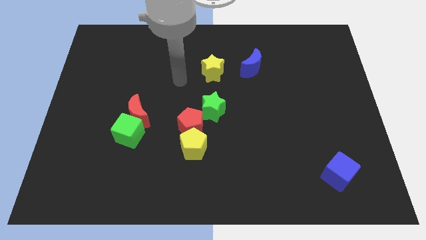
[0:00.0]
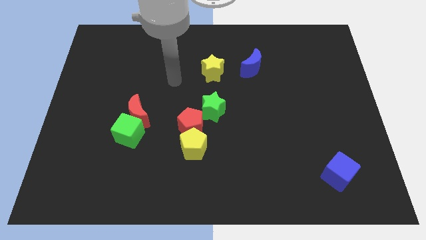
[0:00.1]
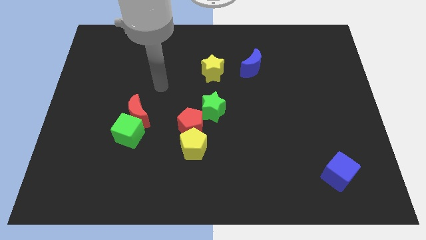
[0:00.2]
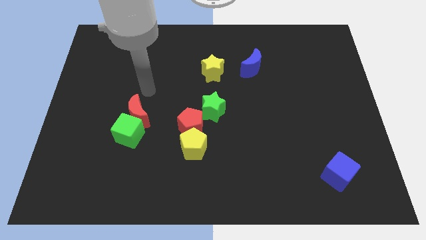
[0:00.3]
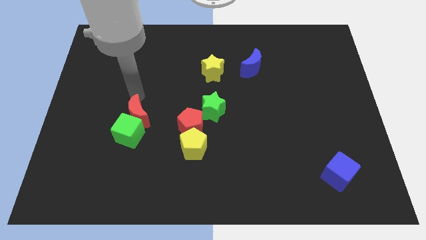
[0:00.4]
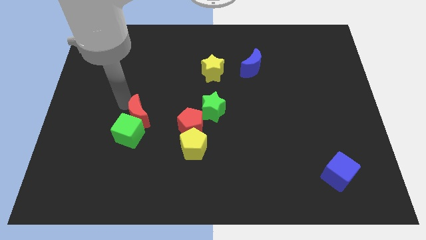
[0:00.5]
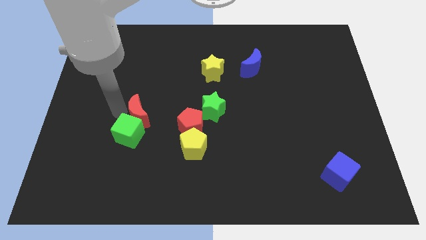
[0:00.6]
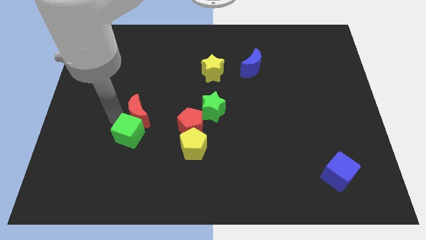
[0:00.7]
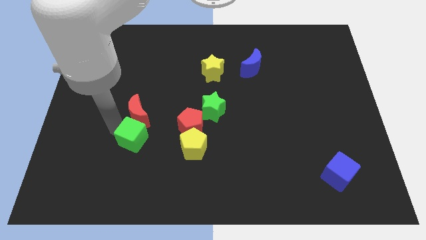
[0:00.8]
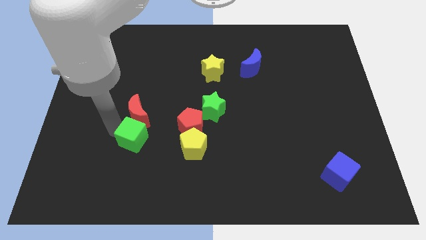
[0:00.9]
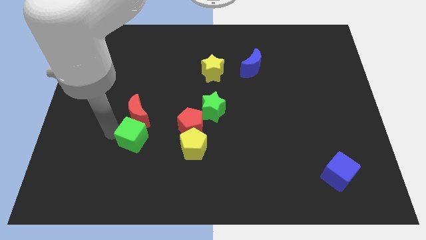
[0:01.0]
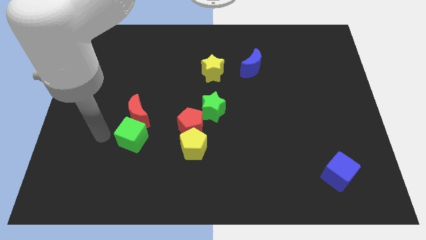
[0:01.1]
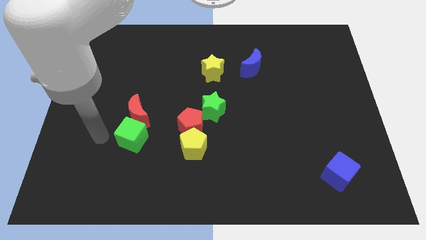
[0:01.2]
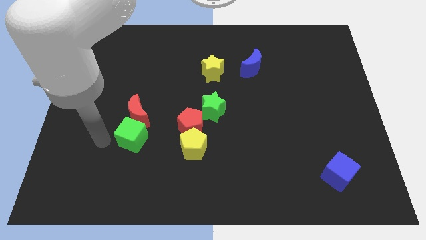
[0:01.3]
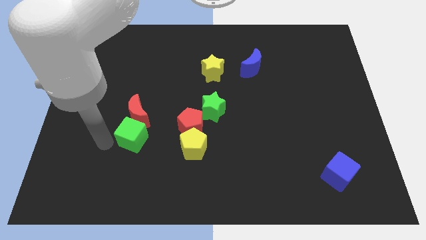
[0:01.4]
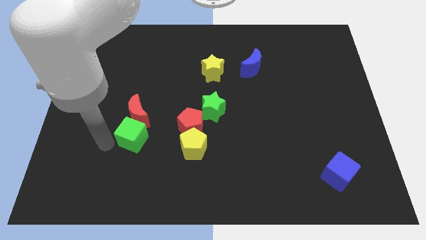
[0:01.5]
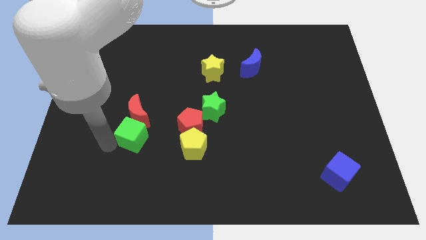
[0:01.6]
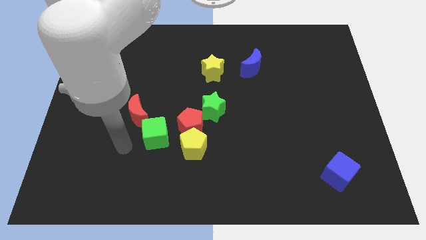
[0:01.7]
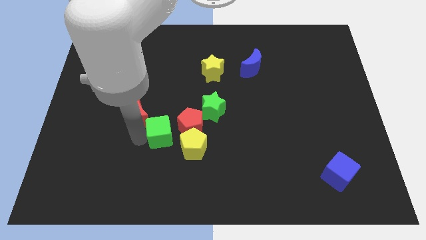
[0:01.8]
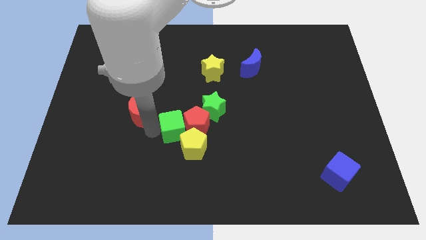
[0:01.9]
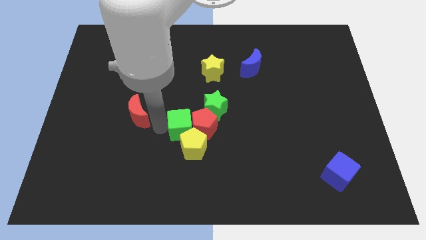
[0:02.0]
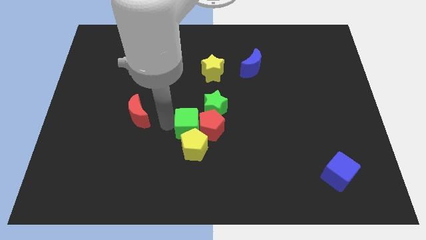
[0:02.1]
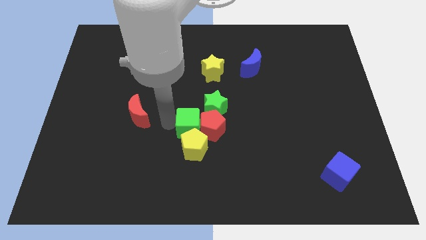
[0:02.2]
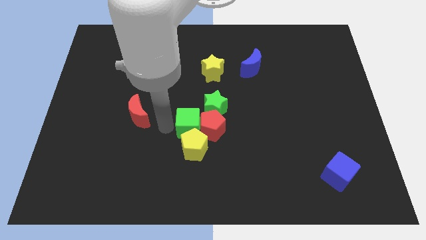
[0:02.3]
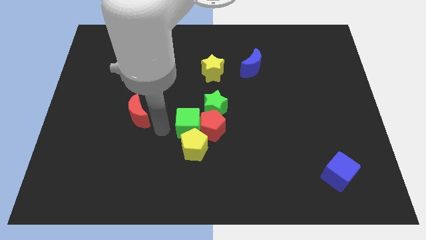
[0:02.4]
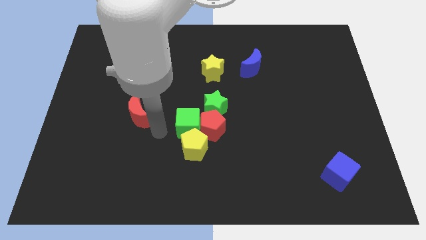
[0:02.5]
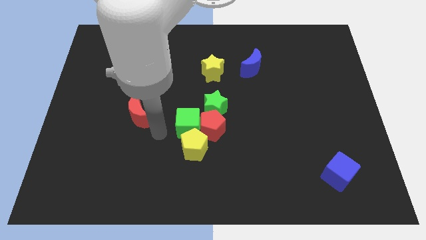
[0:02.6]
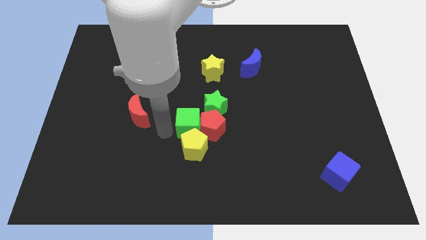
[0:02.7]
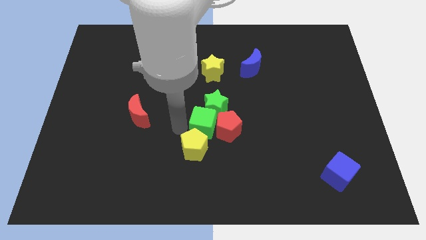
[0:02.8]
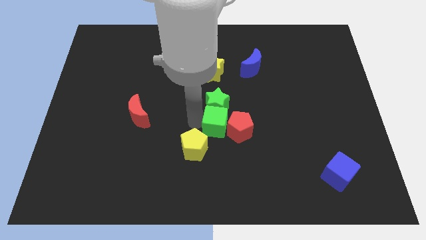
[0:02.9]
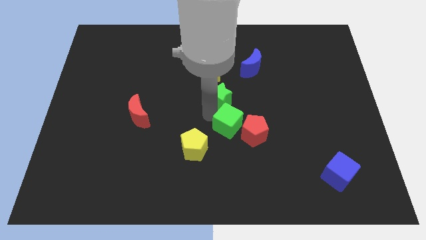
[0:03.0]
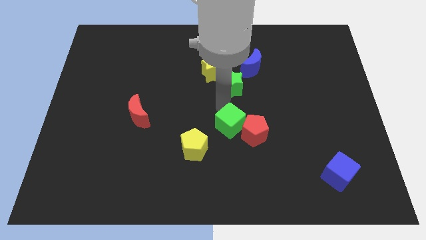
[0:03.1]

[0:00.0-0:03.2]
move green cube to the center

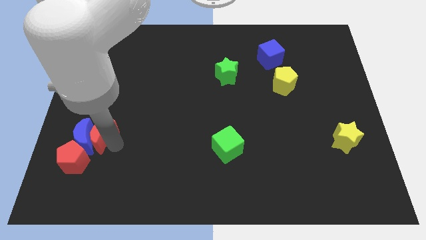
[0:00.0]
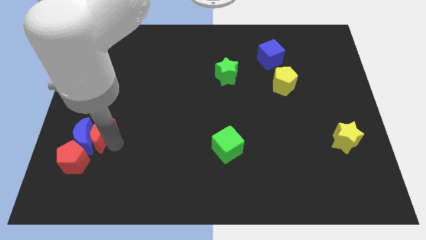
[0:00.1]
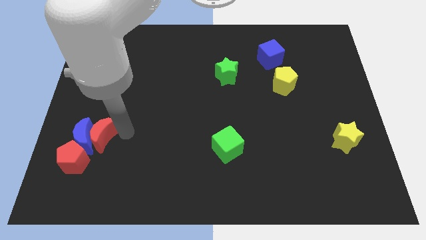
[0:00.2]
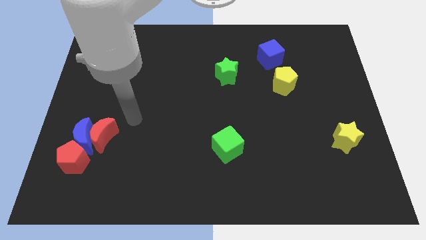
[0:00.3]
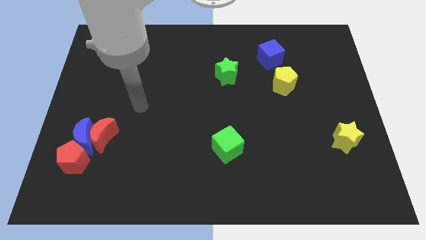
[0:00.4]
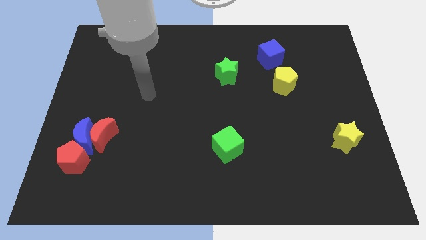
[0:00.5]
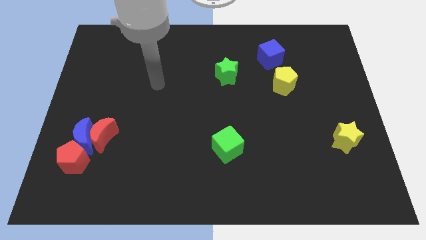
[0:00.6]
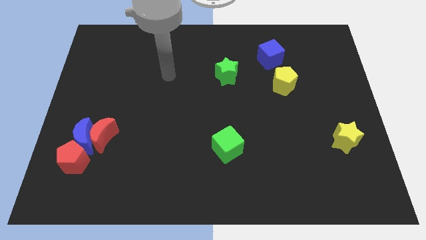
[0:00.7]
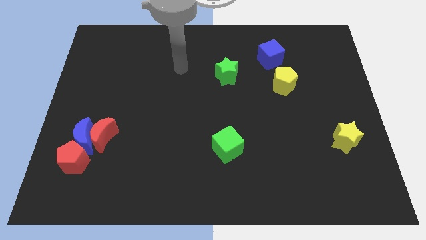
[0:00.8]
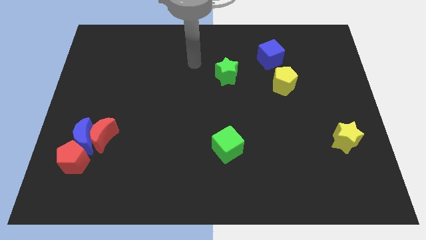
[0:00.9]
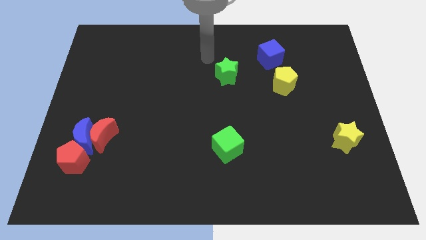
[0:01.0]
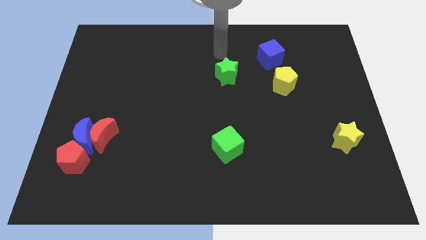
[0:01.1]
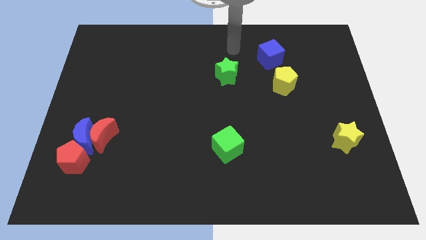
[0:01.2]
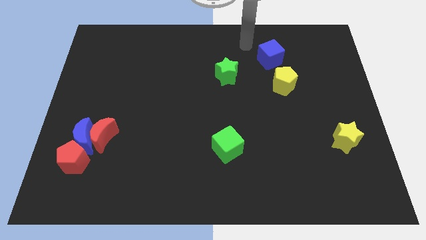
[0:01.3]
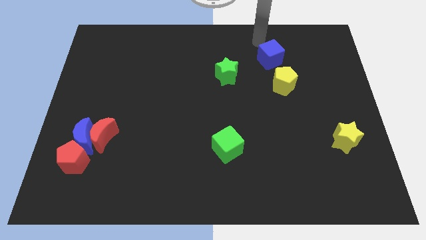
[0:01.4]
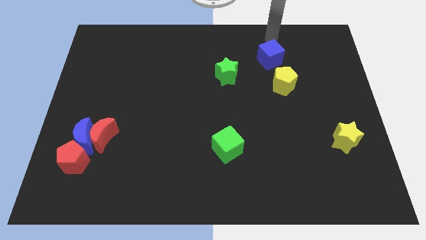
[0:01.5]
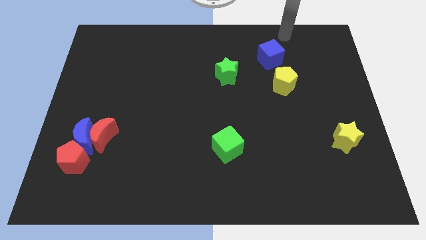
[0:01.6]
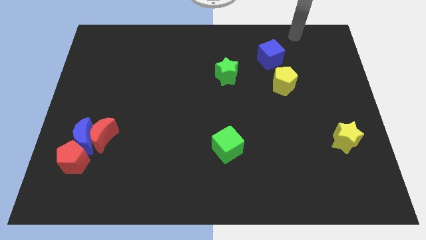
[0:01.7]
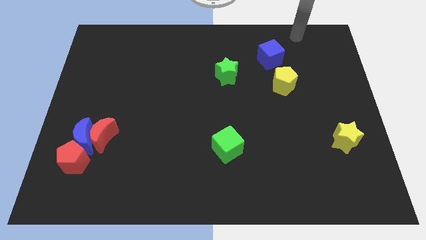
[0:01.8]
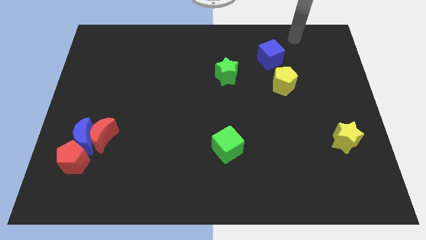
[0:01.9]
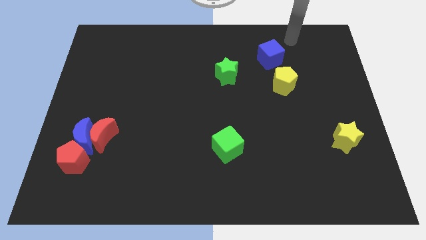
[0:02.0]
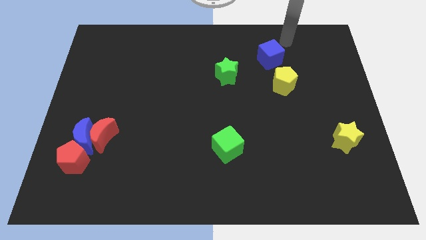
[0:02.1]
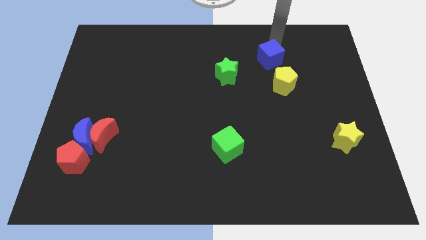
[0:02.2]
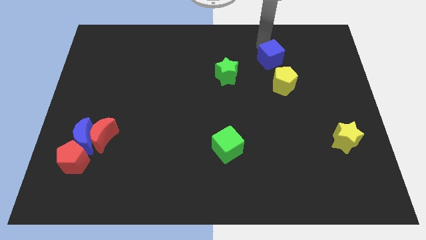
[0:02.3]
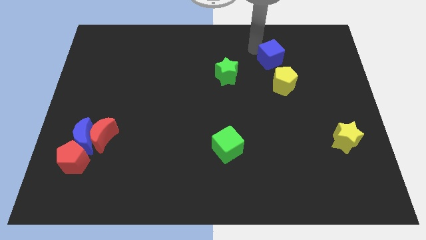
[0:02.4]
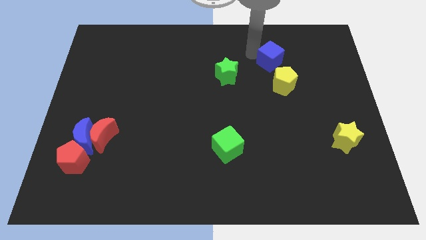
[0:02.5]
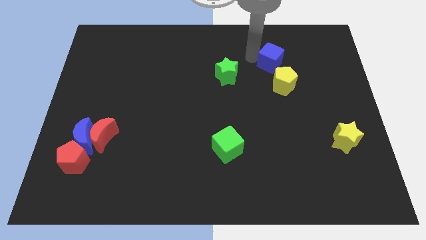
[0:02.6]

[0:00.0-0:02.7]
touch the blue cube

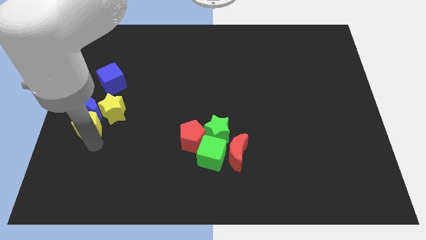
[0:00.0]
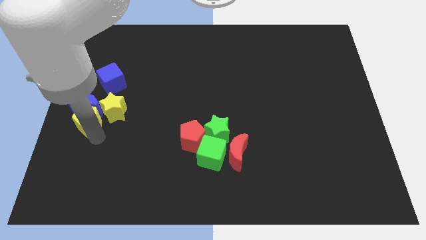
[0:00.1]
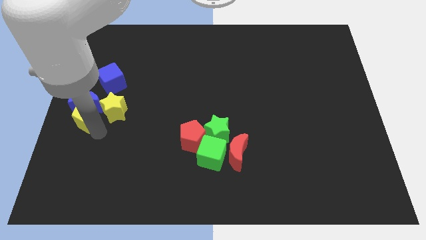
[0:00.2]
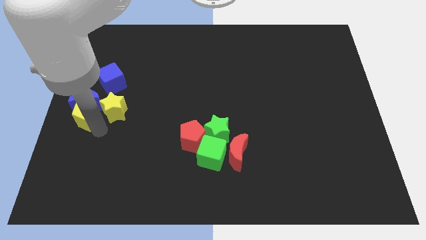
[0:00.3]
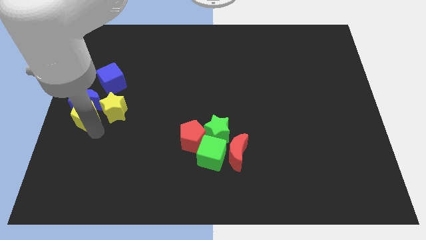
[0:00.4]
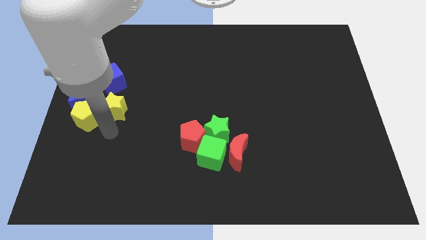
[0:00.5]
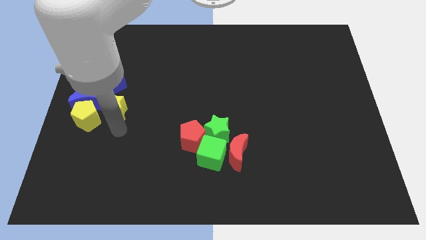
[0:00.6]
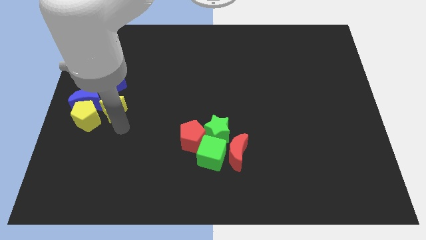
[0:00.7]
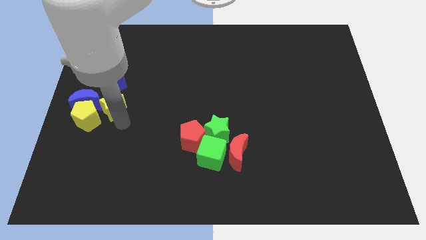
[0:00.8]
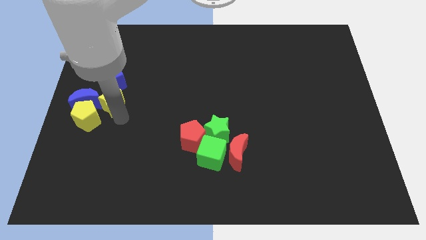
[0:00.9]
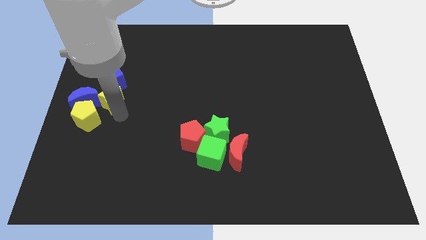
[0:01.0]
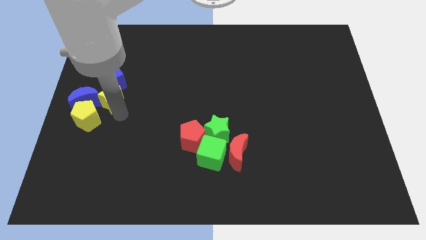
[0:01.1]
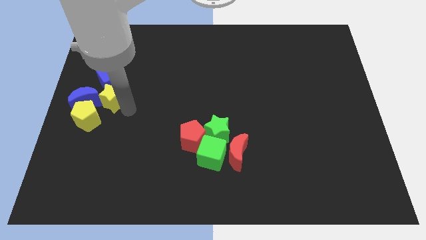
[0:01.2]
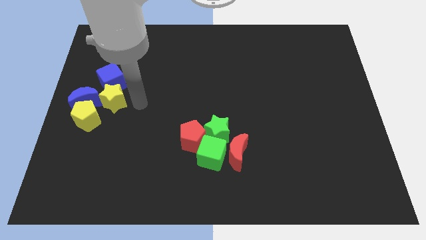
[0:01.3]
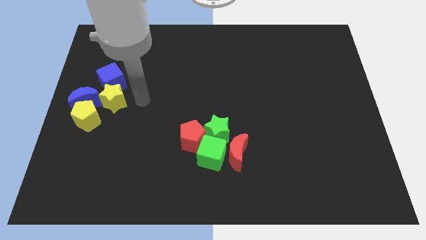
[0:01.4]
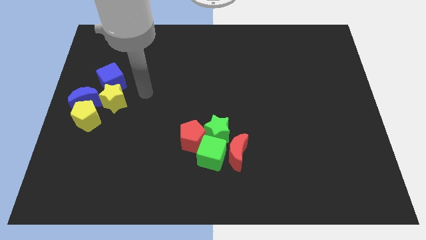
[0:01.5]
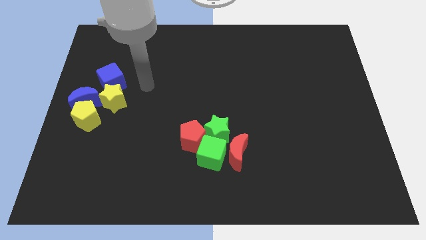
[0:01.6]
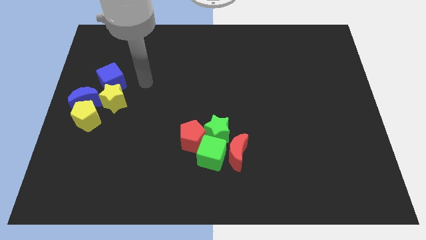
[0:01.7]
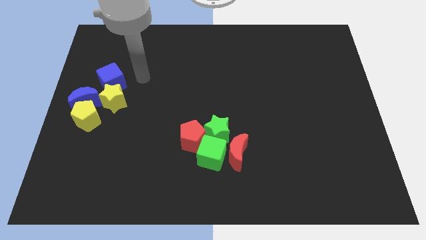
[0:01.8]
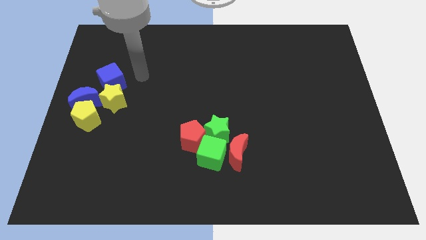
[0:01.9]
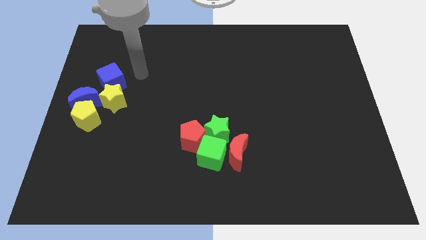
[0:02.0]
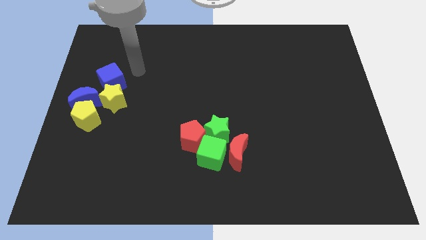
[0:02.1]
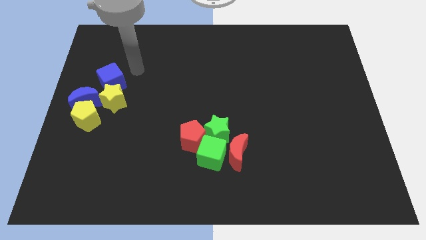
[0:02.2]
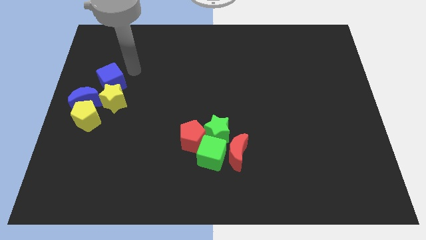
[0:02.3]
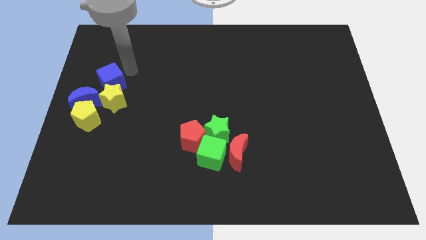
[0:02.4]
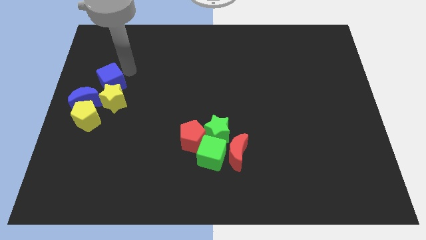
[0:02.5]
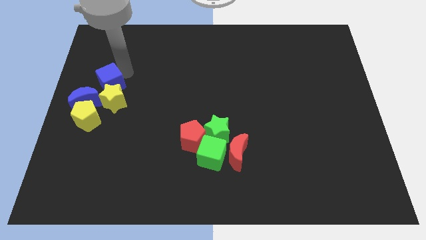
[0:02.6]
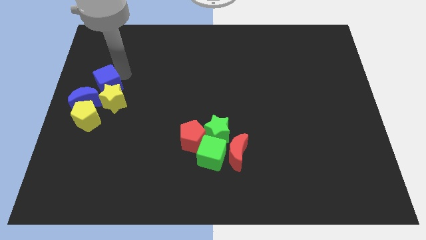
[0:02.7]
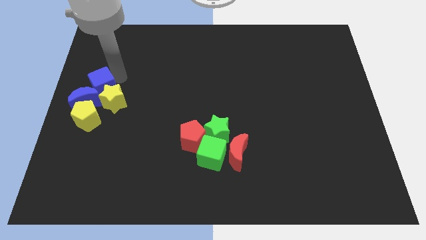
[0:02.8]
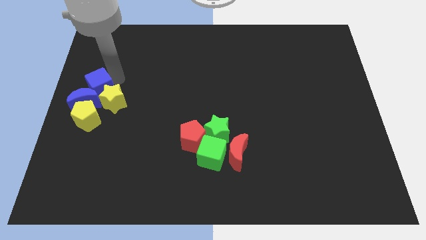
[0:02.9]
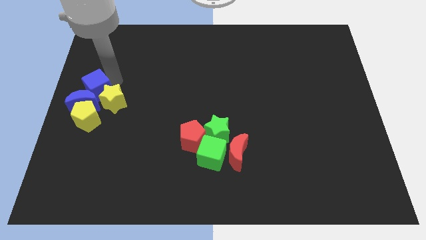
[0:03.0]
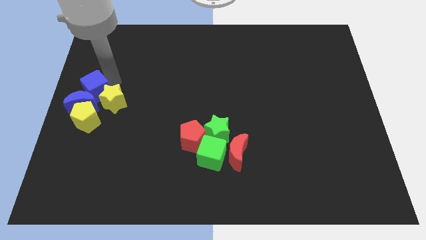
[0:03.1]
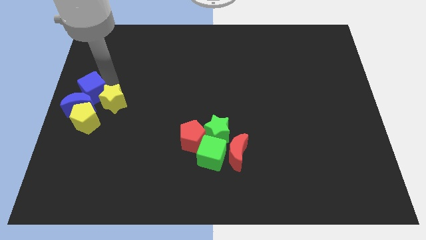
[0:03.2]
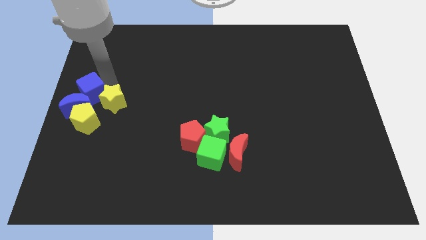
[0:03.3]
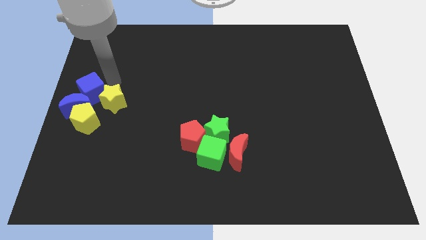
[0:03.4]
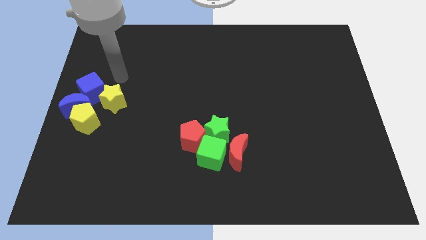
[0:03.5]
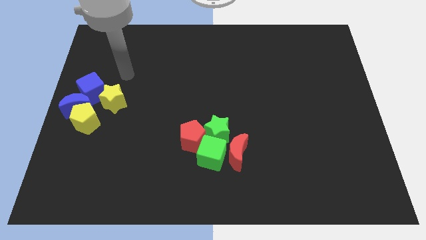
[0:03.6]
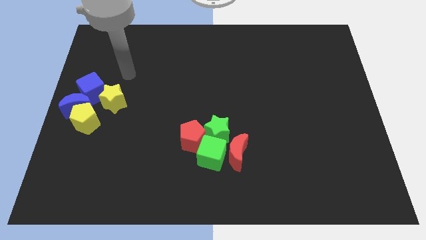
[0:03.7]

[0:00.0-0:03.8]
push the blue cube into blue moon
